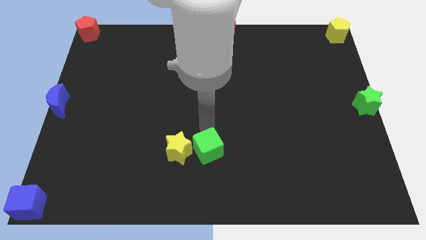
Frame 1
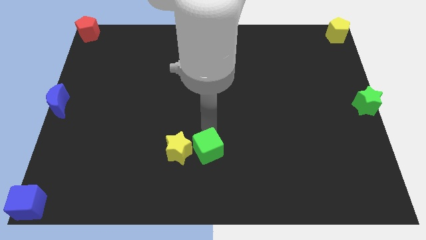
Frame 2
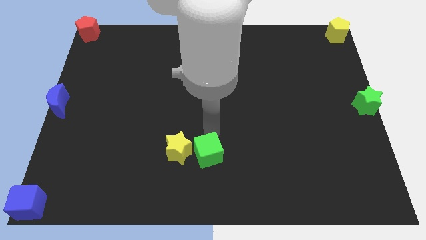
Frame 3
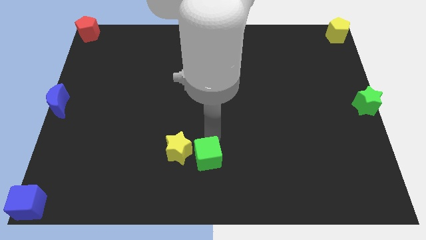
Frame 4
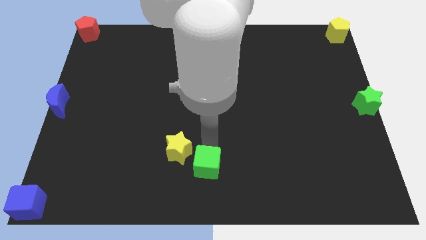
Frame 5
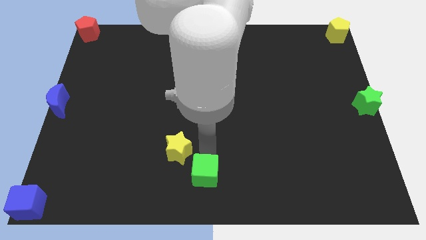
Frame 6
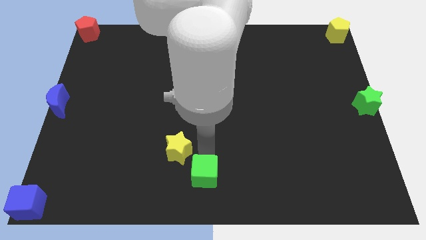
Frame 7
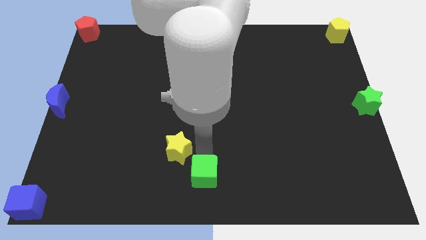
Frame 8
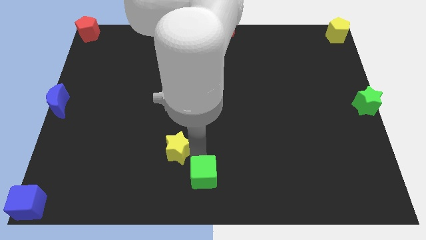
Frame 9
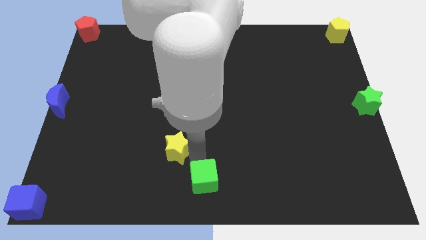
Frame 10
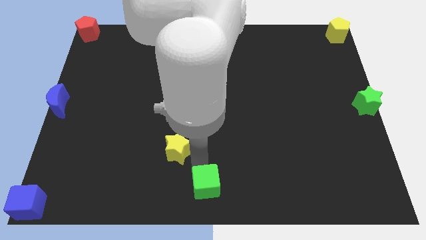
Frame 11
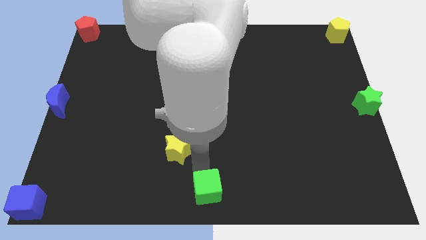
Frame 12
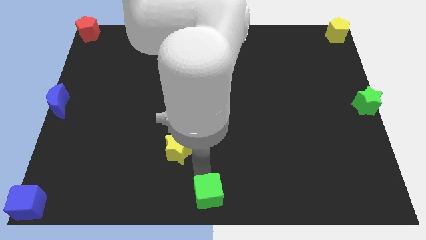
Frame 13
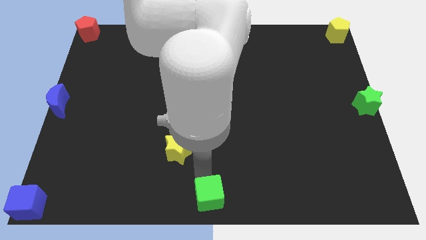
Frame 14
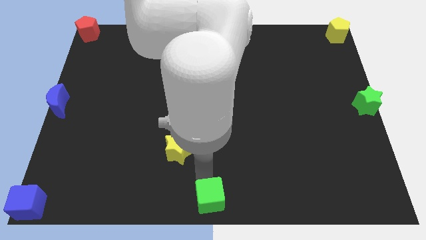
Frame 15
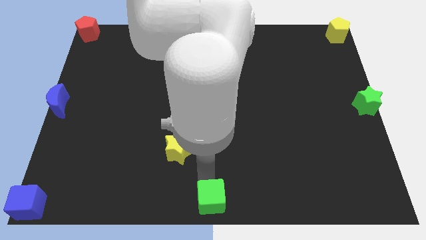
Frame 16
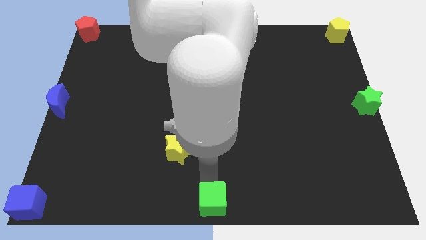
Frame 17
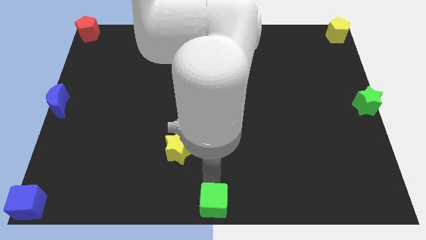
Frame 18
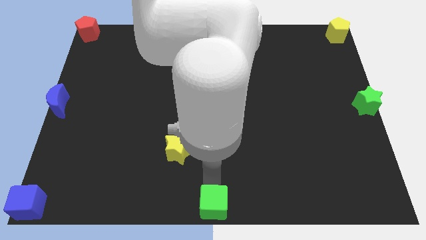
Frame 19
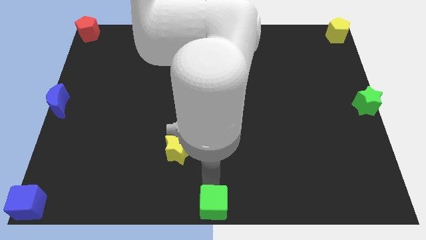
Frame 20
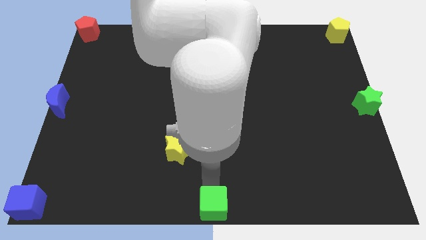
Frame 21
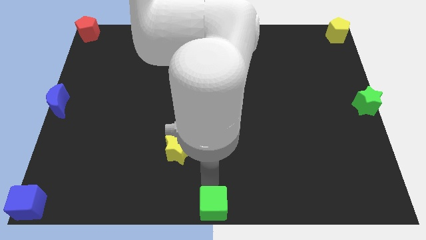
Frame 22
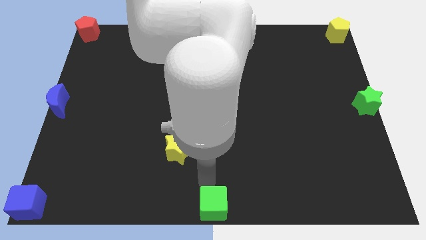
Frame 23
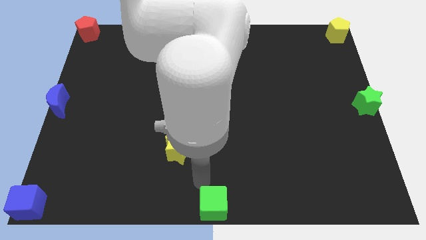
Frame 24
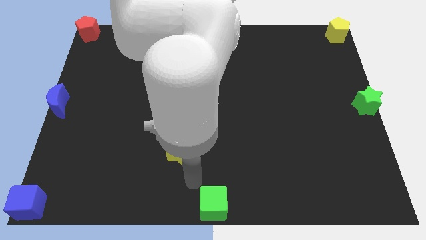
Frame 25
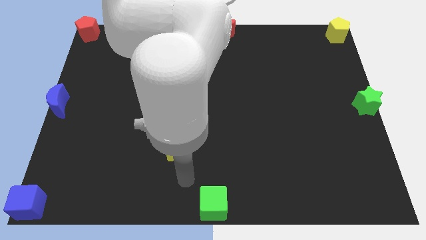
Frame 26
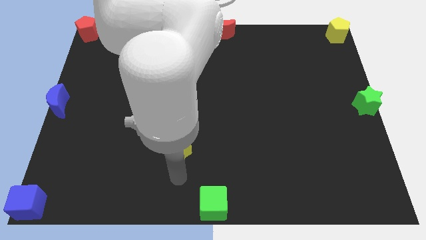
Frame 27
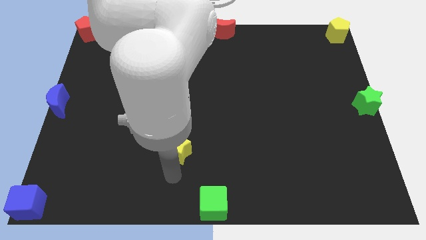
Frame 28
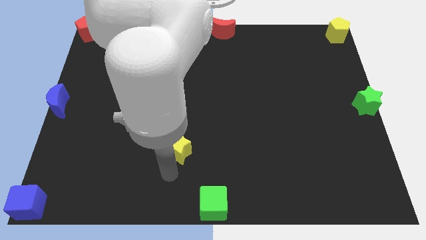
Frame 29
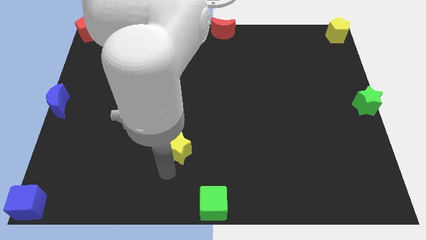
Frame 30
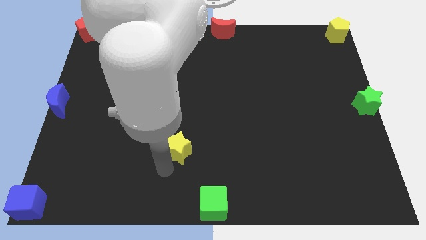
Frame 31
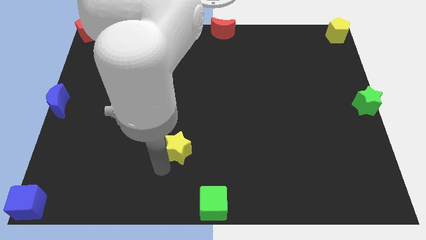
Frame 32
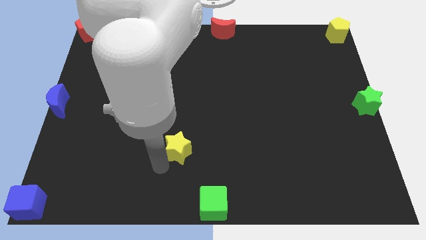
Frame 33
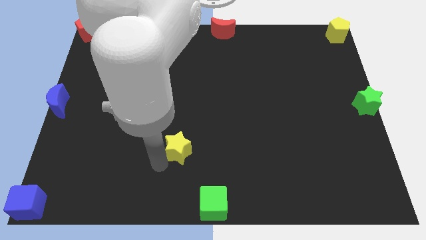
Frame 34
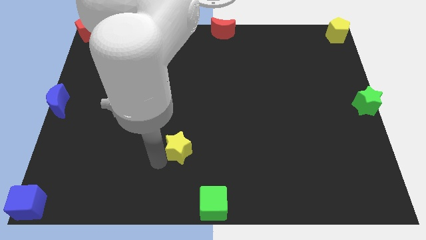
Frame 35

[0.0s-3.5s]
move the green cube to the bottom center

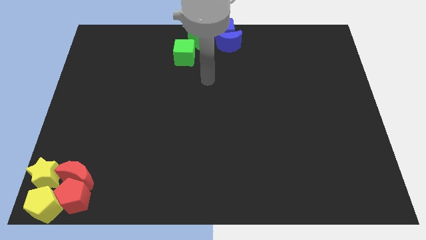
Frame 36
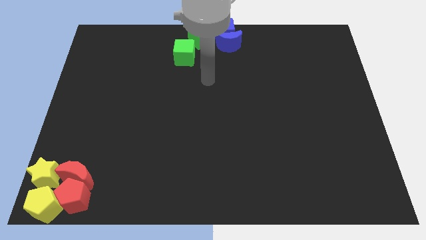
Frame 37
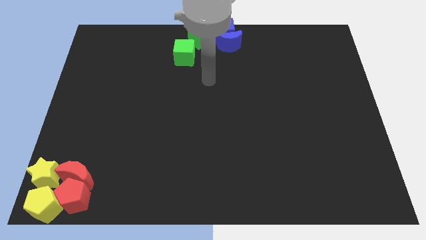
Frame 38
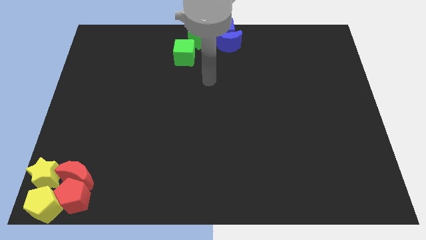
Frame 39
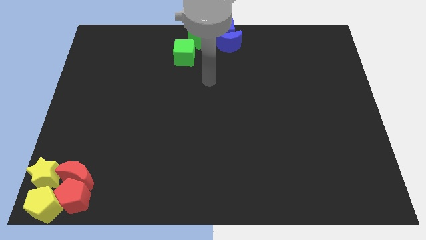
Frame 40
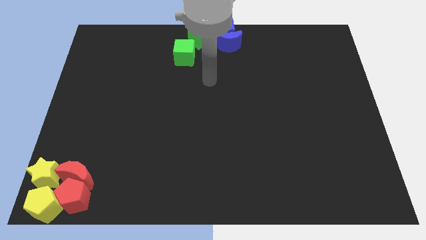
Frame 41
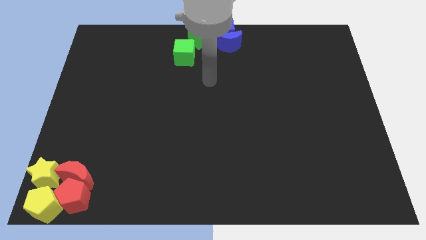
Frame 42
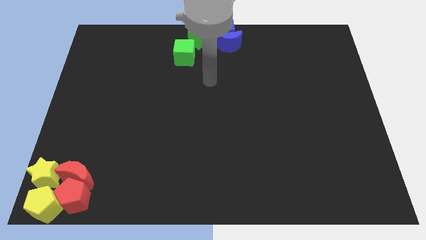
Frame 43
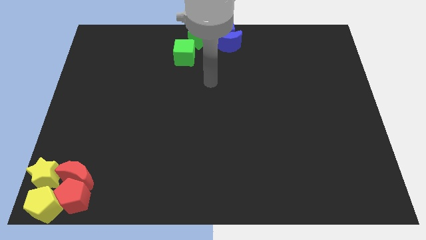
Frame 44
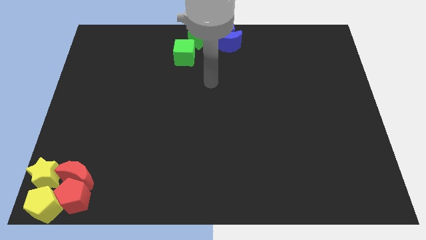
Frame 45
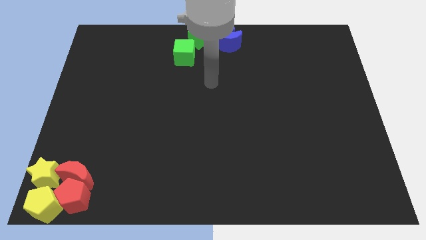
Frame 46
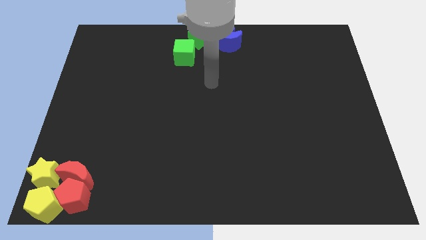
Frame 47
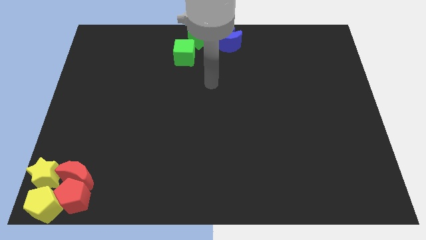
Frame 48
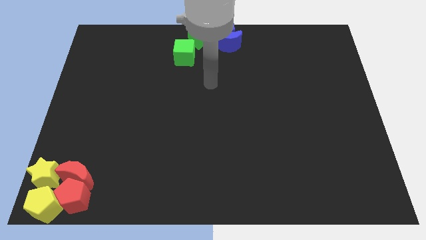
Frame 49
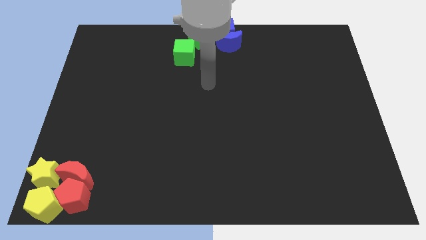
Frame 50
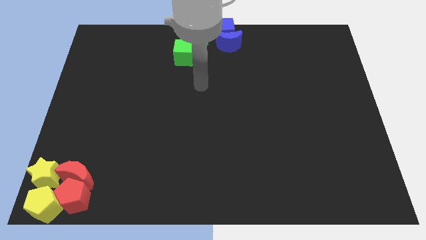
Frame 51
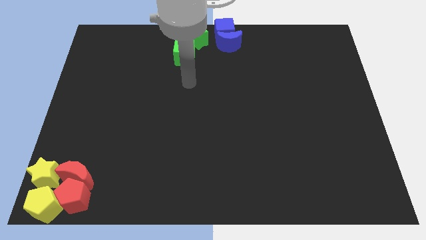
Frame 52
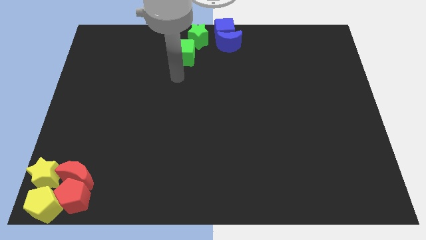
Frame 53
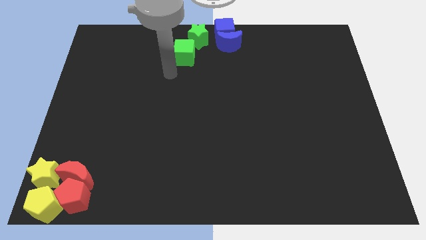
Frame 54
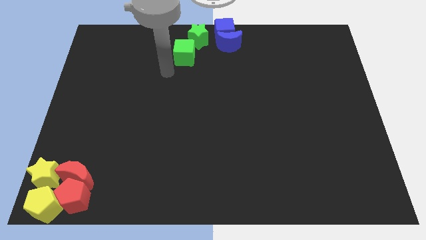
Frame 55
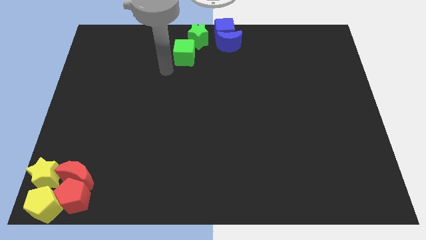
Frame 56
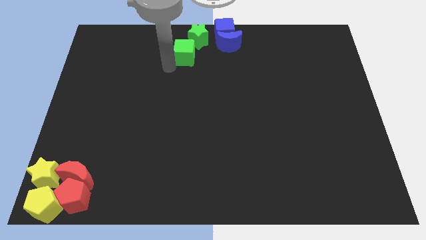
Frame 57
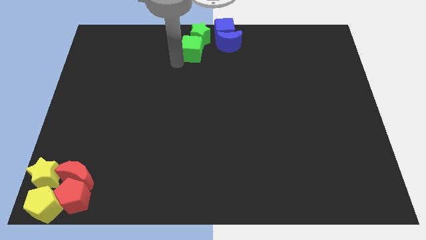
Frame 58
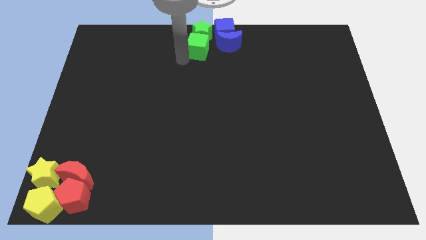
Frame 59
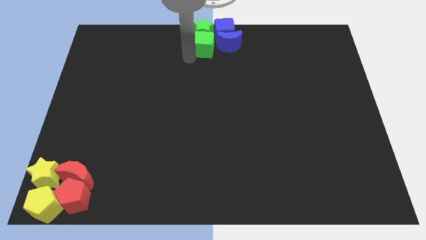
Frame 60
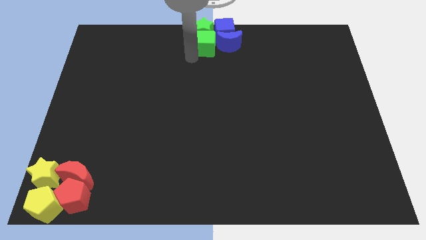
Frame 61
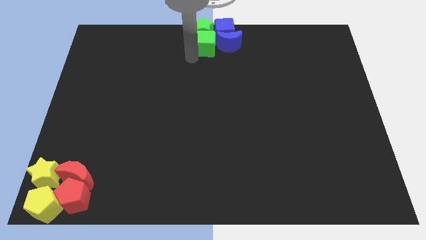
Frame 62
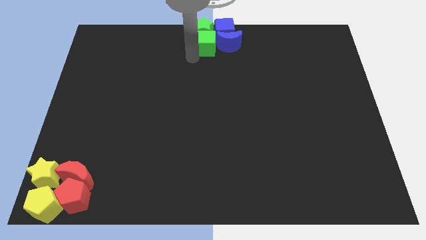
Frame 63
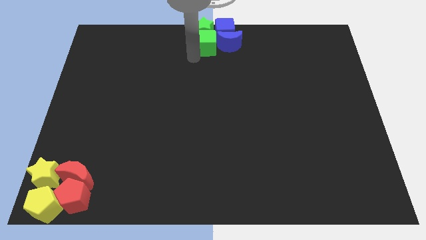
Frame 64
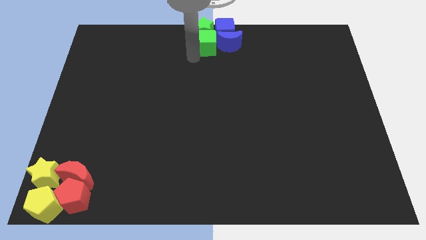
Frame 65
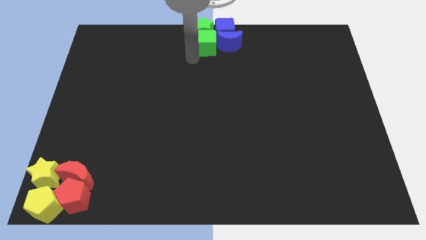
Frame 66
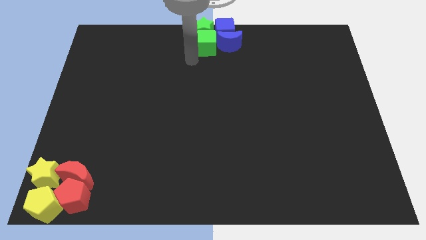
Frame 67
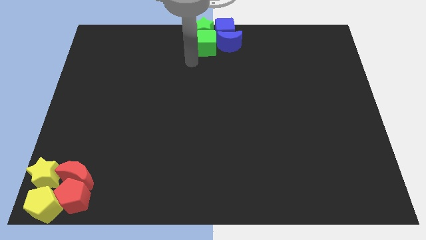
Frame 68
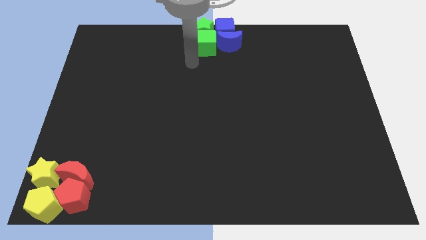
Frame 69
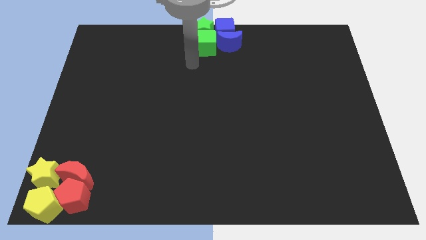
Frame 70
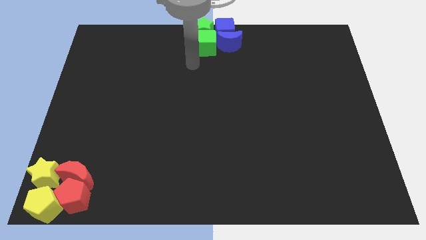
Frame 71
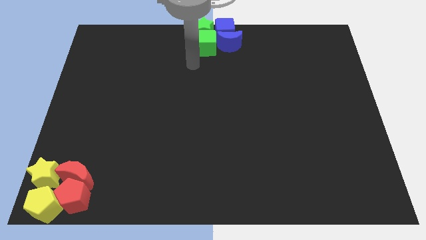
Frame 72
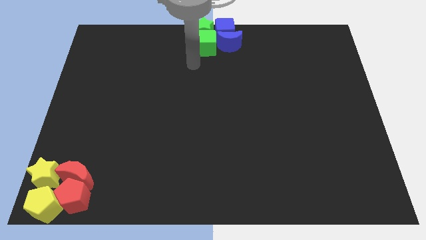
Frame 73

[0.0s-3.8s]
place green cube below the green star

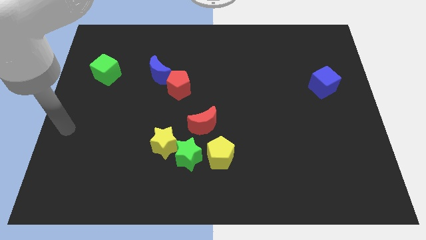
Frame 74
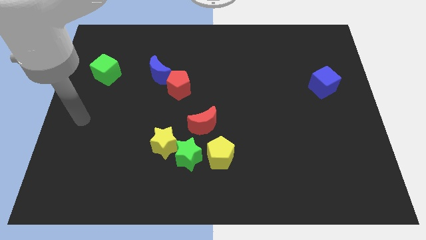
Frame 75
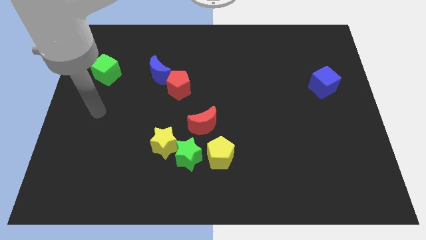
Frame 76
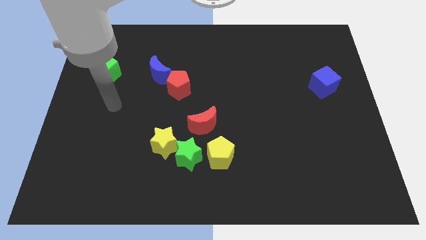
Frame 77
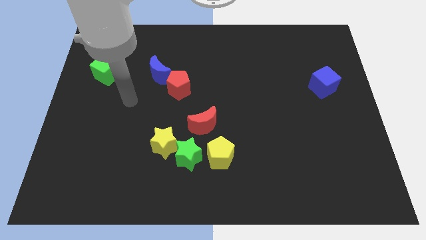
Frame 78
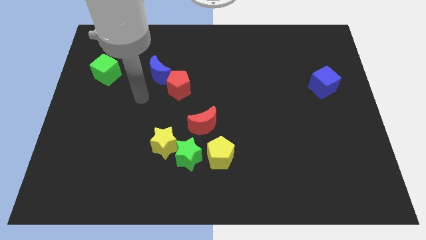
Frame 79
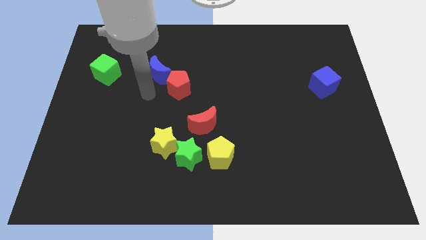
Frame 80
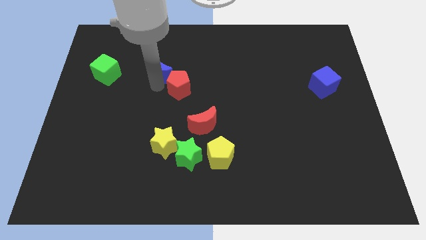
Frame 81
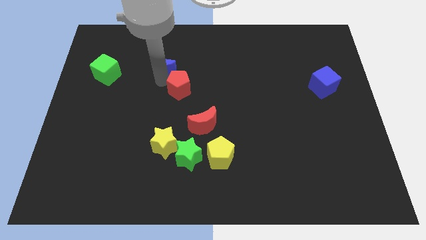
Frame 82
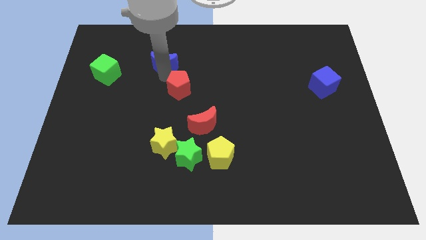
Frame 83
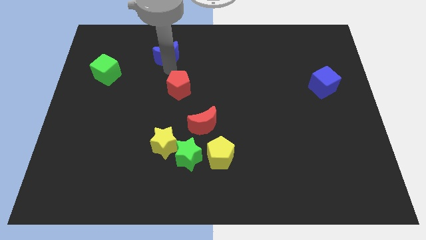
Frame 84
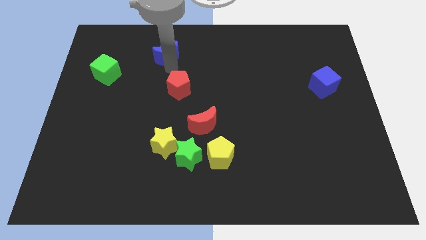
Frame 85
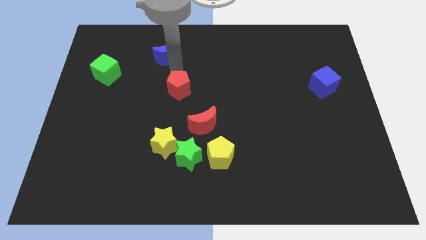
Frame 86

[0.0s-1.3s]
go and separate the blue crescent from the red pentagon

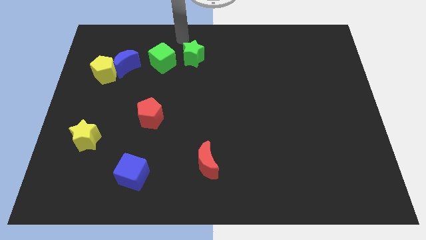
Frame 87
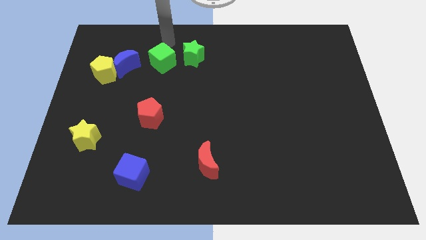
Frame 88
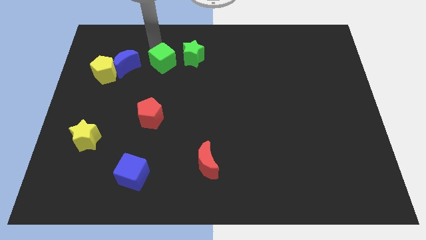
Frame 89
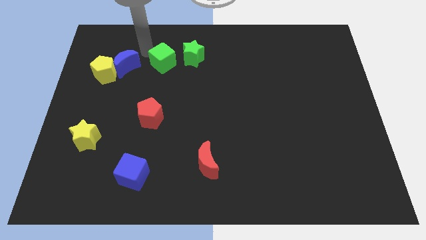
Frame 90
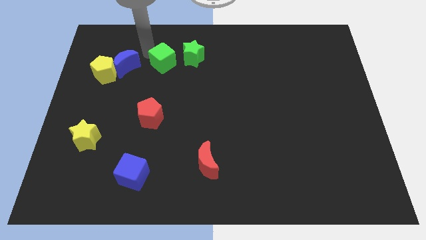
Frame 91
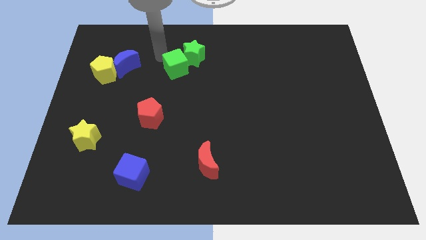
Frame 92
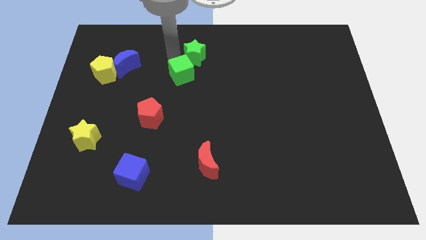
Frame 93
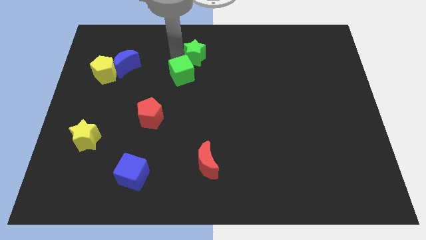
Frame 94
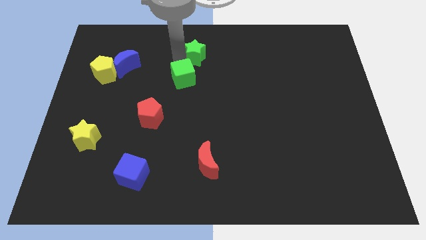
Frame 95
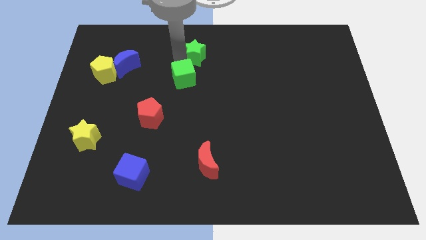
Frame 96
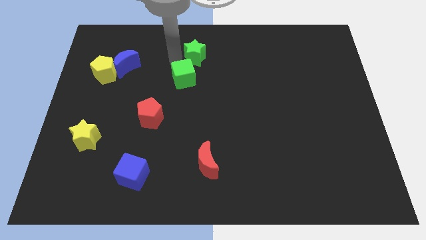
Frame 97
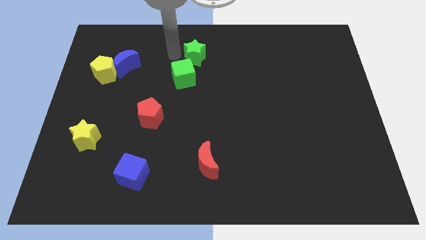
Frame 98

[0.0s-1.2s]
move the green cube below the green star
